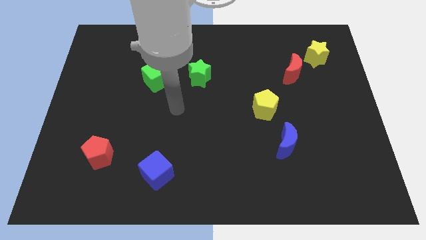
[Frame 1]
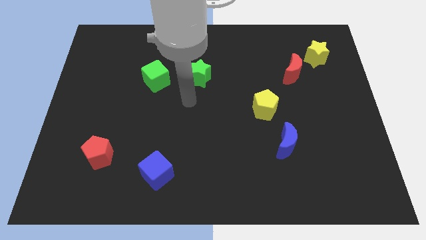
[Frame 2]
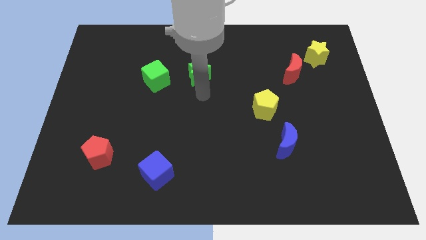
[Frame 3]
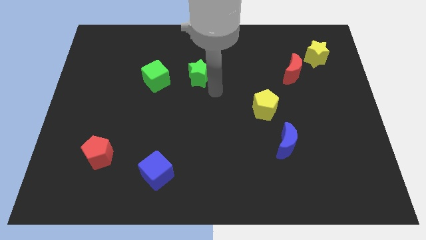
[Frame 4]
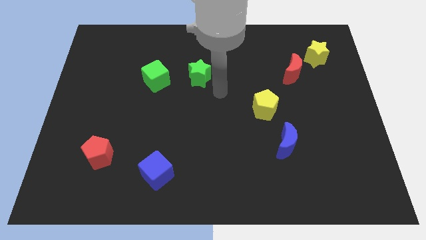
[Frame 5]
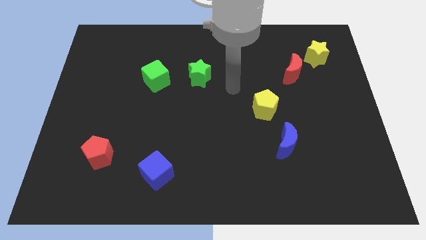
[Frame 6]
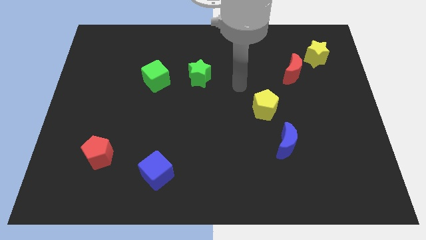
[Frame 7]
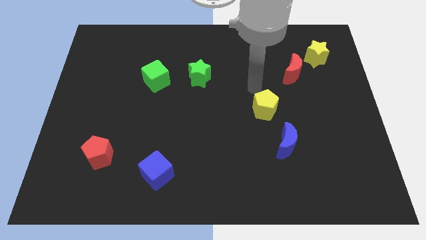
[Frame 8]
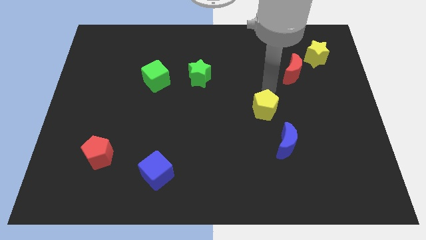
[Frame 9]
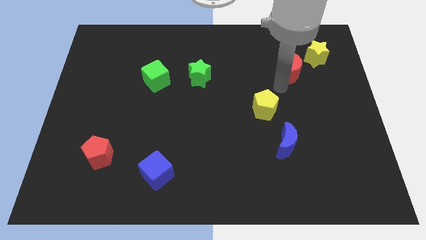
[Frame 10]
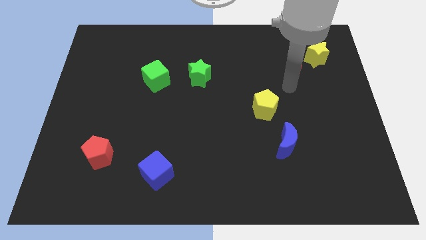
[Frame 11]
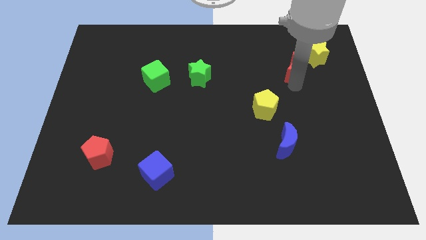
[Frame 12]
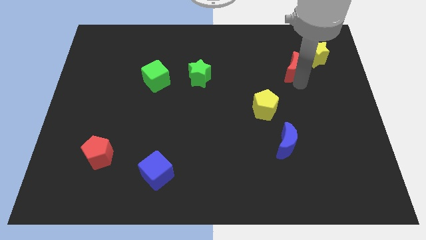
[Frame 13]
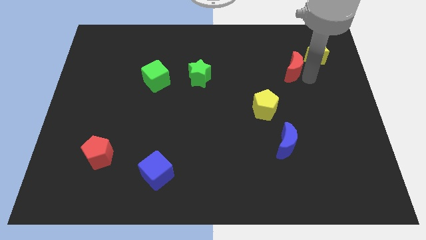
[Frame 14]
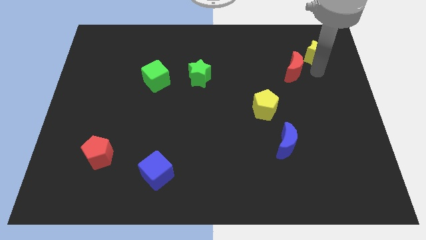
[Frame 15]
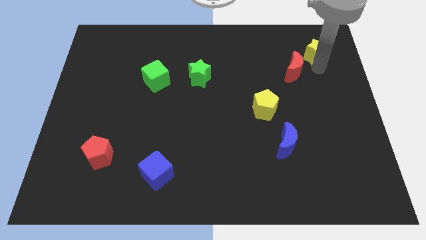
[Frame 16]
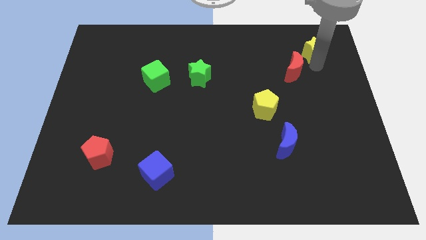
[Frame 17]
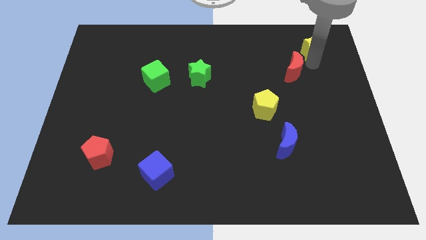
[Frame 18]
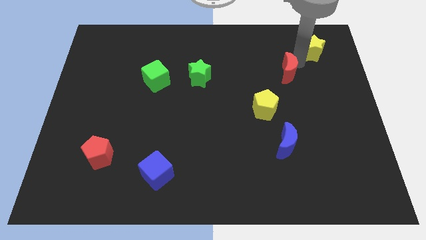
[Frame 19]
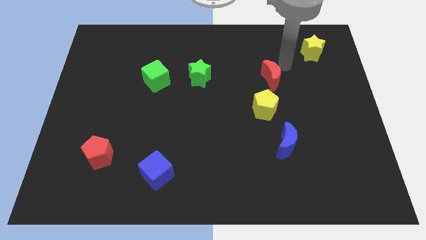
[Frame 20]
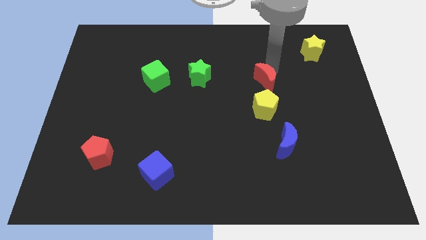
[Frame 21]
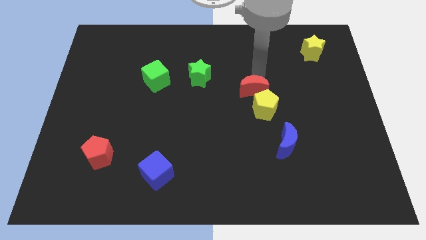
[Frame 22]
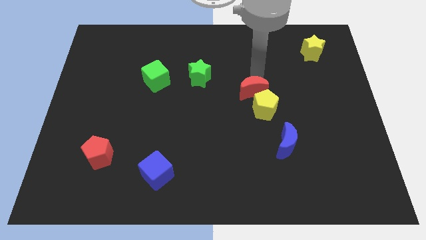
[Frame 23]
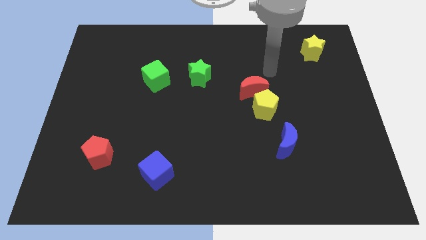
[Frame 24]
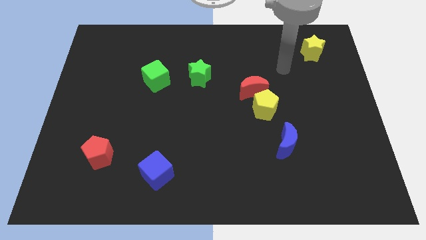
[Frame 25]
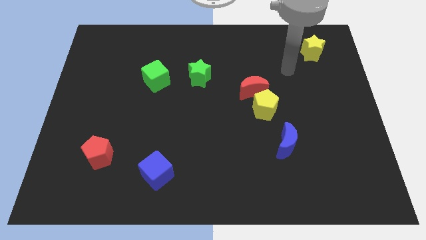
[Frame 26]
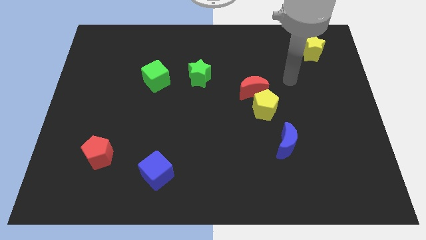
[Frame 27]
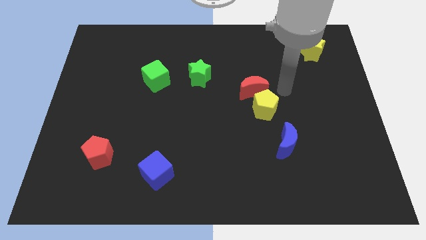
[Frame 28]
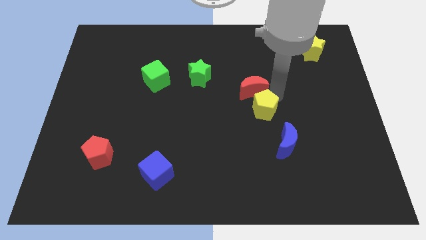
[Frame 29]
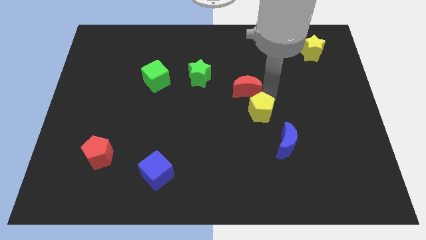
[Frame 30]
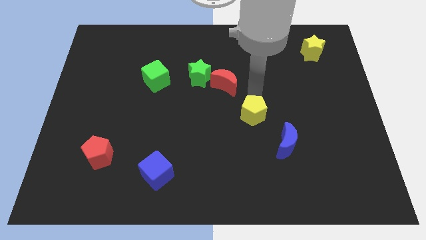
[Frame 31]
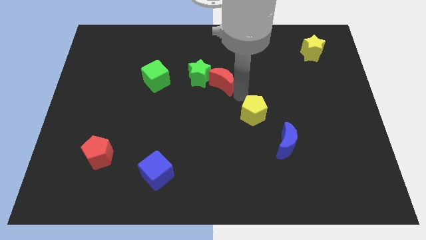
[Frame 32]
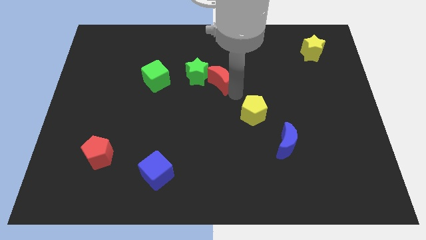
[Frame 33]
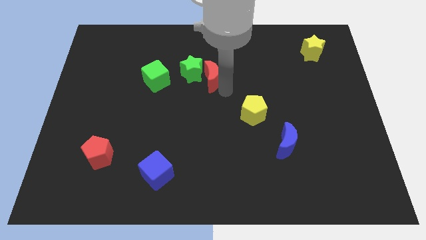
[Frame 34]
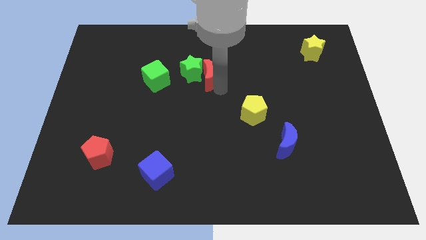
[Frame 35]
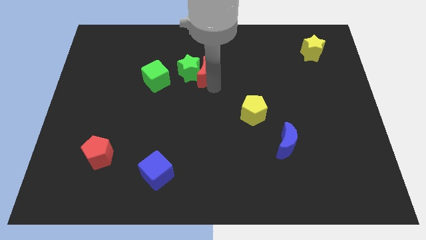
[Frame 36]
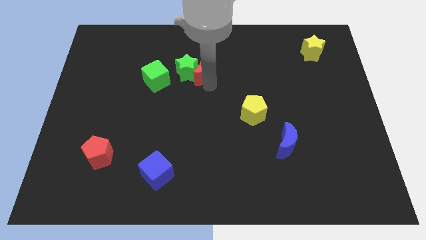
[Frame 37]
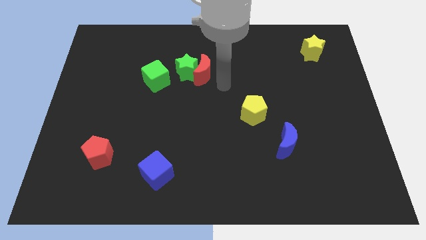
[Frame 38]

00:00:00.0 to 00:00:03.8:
move red crescent into right of green star

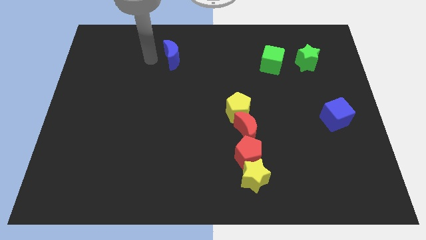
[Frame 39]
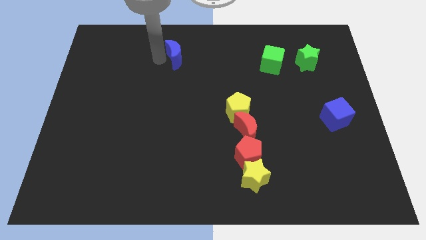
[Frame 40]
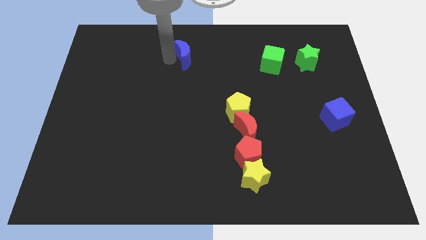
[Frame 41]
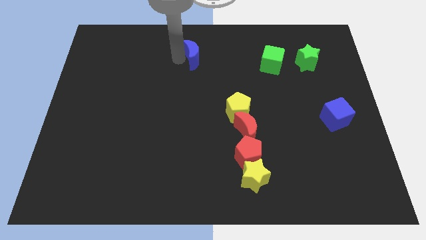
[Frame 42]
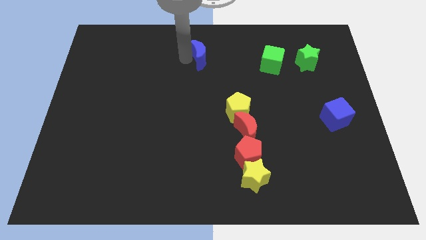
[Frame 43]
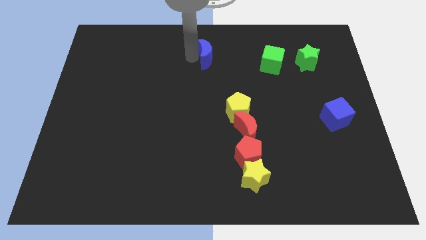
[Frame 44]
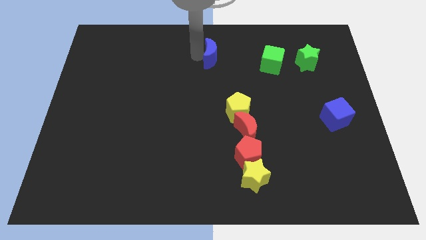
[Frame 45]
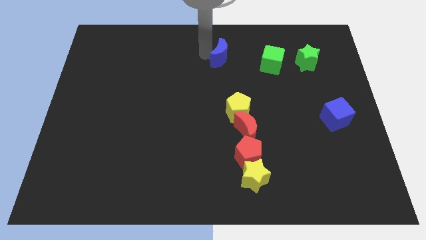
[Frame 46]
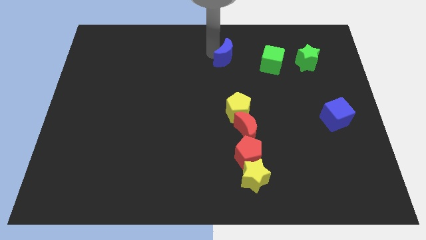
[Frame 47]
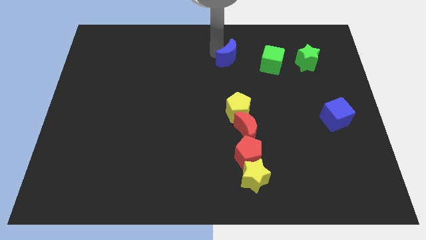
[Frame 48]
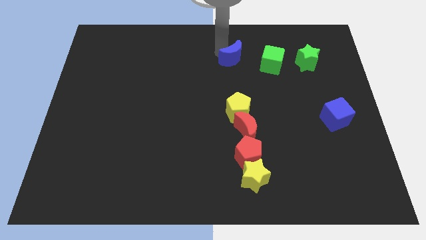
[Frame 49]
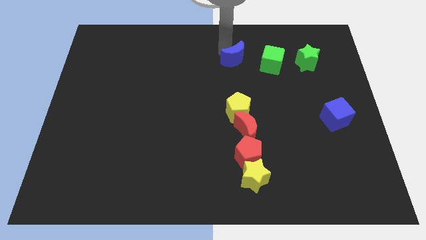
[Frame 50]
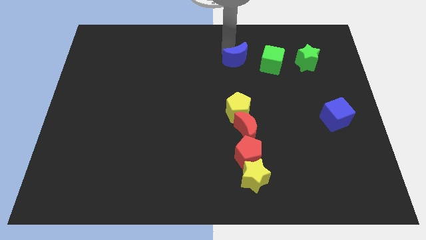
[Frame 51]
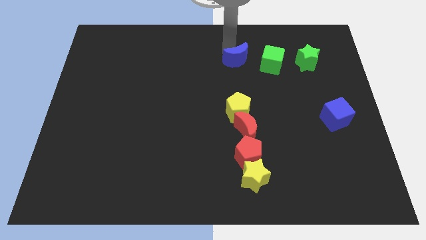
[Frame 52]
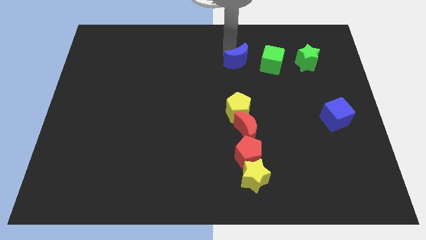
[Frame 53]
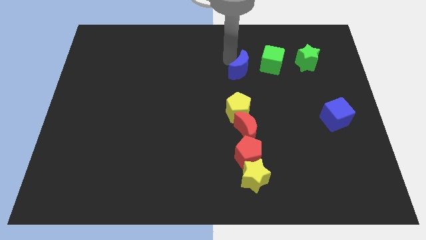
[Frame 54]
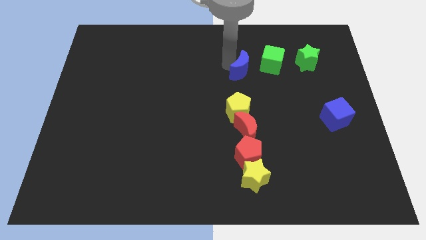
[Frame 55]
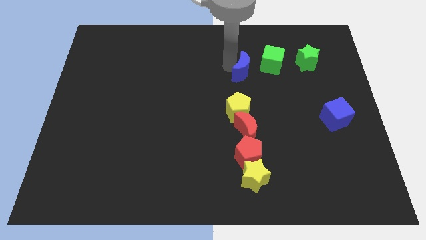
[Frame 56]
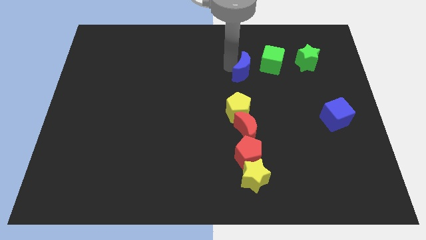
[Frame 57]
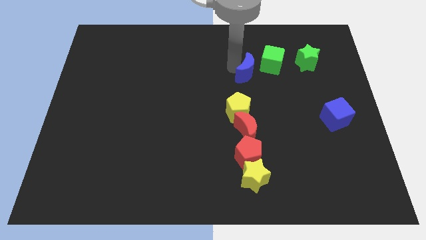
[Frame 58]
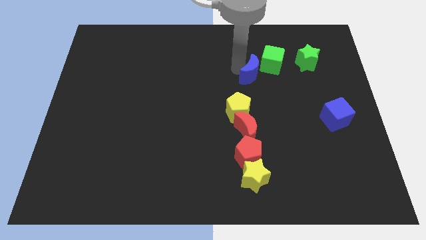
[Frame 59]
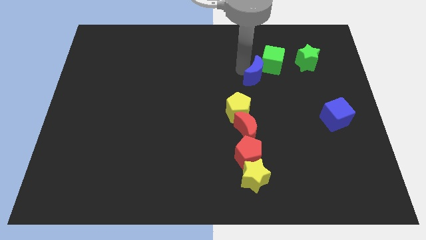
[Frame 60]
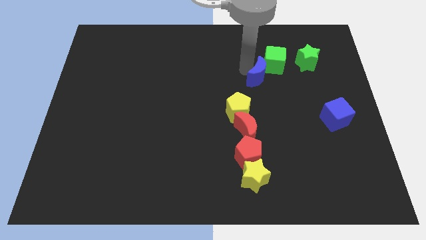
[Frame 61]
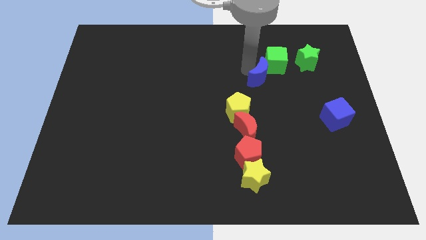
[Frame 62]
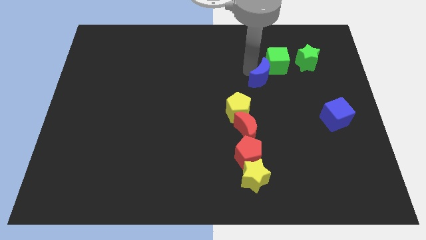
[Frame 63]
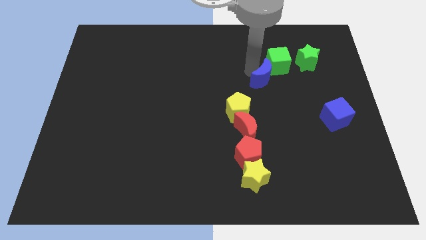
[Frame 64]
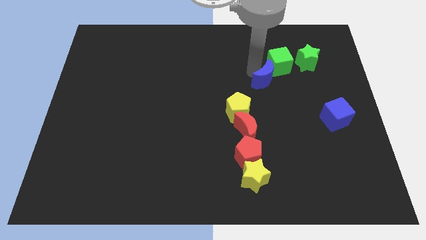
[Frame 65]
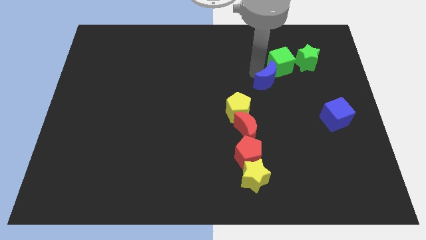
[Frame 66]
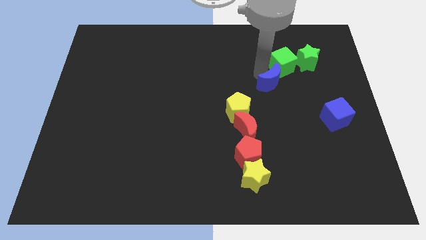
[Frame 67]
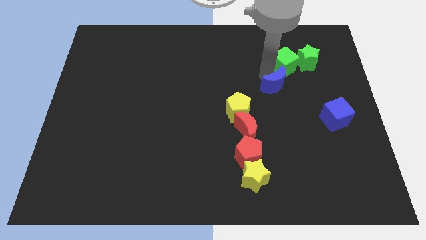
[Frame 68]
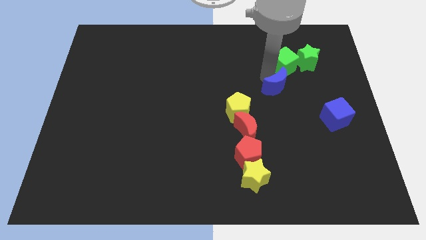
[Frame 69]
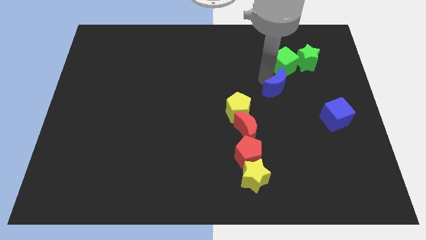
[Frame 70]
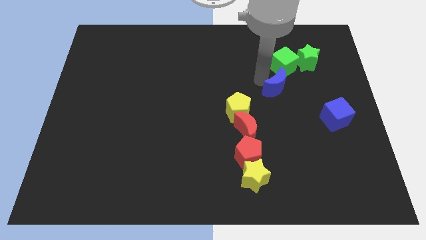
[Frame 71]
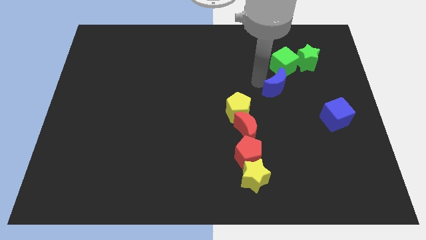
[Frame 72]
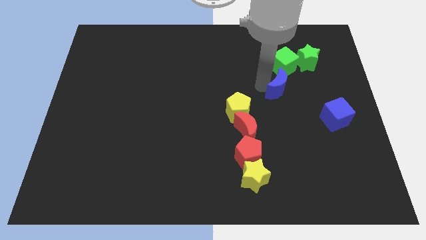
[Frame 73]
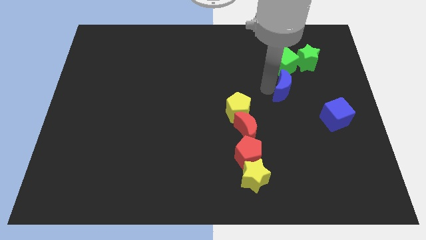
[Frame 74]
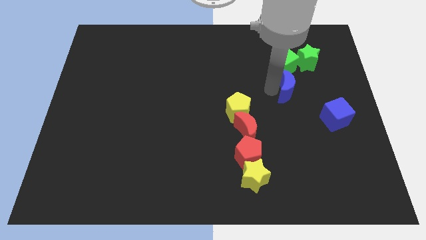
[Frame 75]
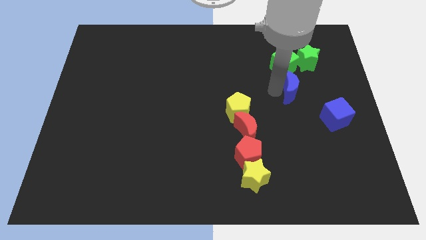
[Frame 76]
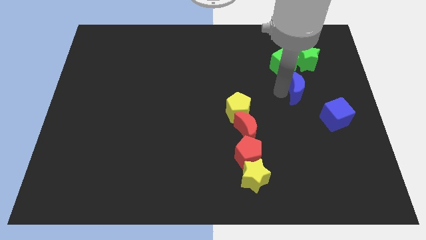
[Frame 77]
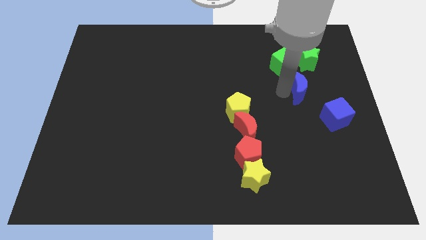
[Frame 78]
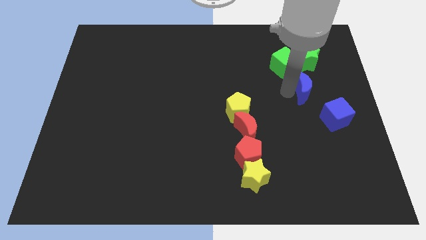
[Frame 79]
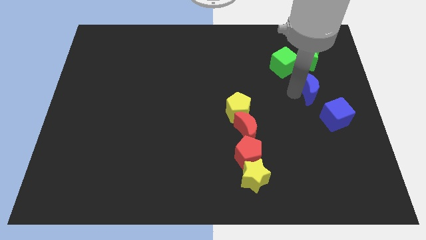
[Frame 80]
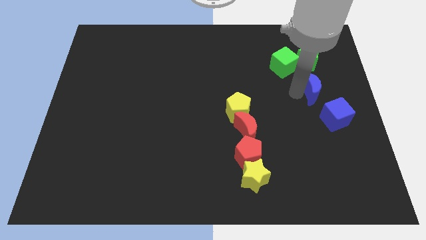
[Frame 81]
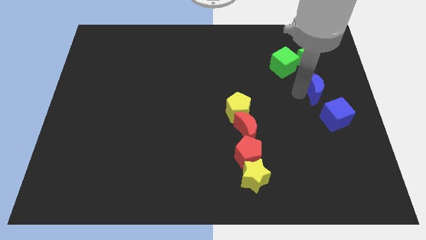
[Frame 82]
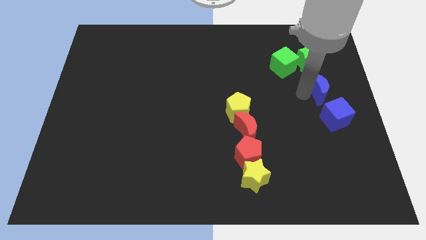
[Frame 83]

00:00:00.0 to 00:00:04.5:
move the blue moon to the bottom side of the green star

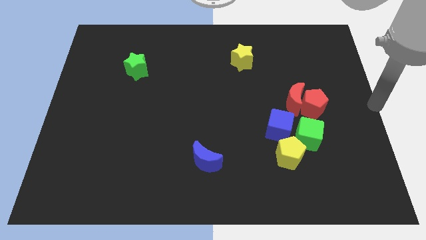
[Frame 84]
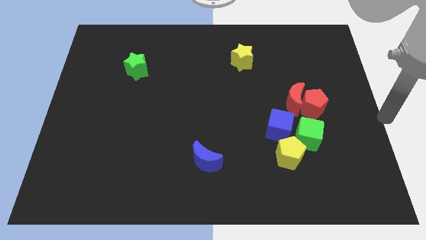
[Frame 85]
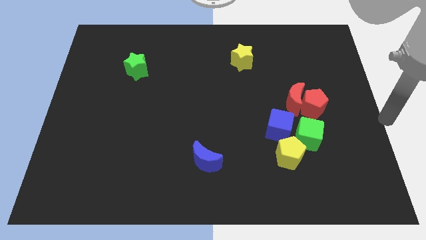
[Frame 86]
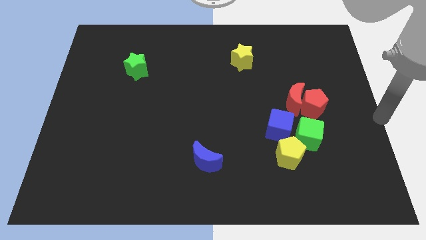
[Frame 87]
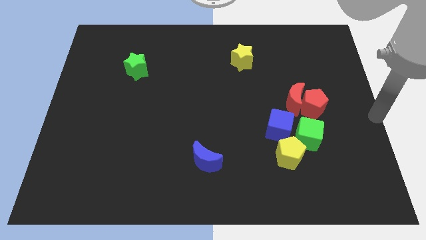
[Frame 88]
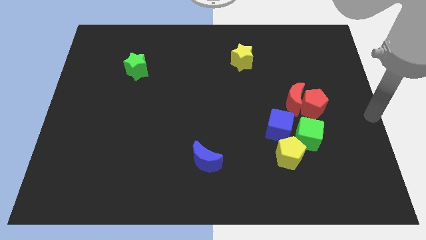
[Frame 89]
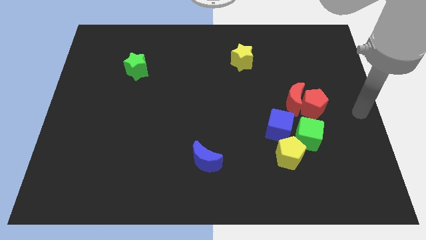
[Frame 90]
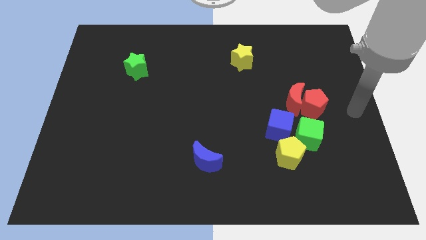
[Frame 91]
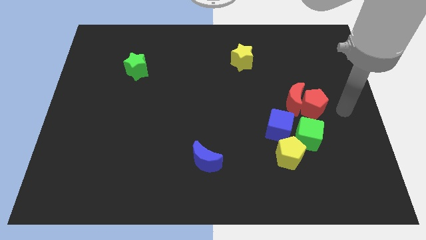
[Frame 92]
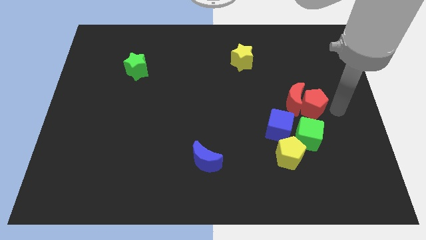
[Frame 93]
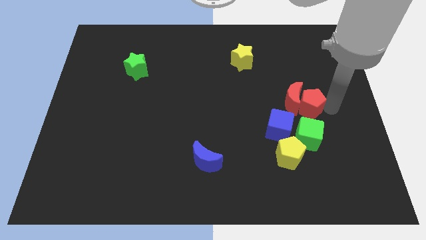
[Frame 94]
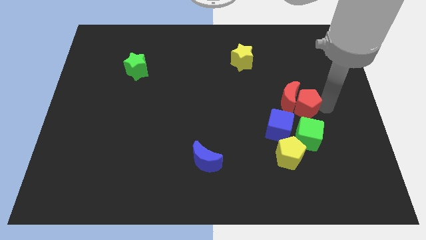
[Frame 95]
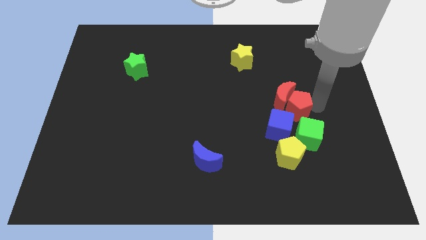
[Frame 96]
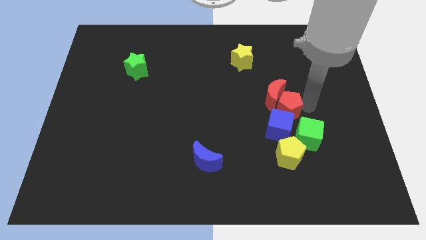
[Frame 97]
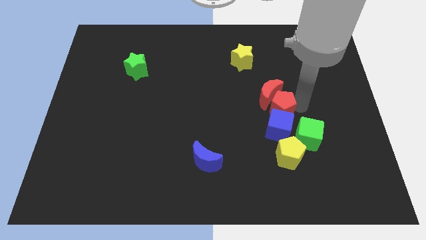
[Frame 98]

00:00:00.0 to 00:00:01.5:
push the red pentagon into the red crescent
